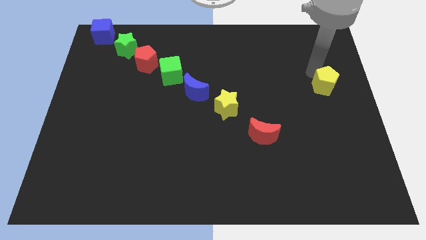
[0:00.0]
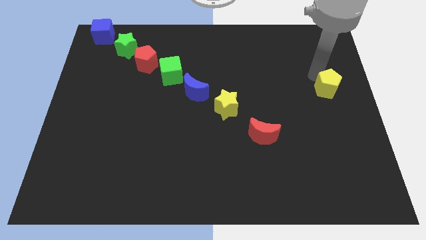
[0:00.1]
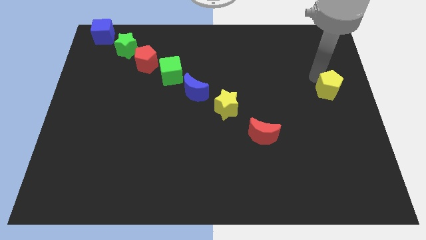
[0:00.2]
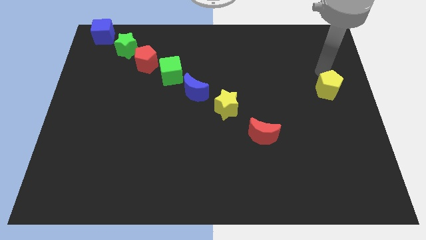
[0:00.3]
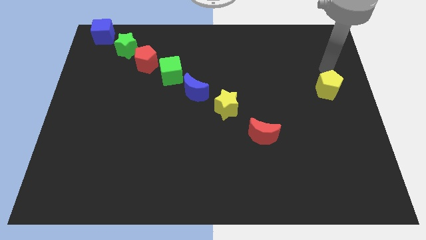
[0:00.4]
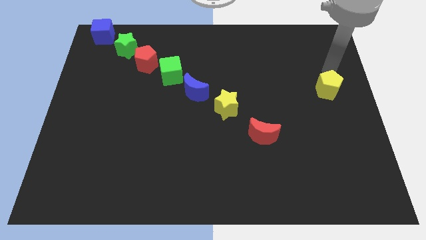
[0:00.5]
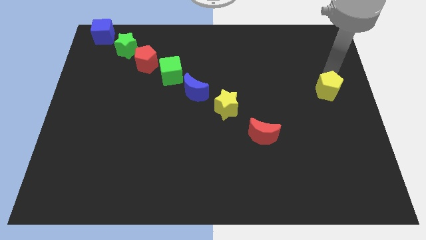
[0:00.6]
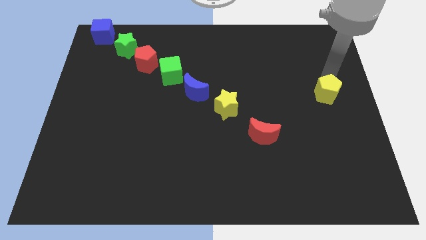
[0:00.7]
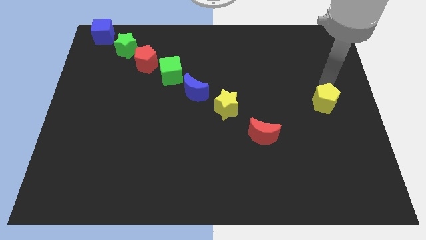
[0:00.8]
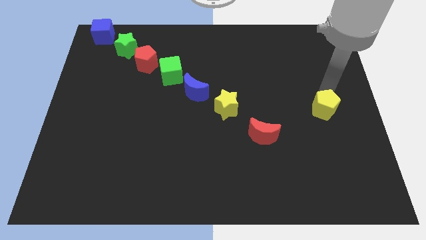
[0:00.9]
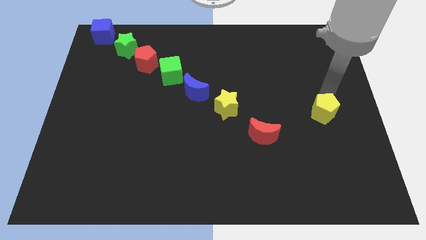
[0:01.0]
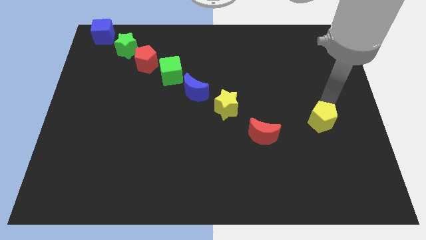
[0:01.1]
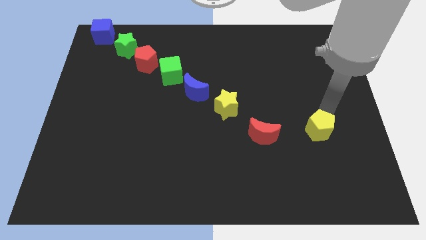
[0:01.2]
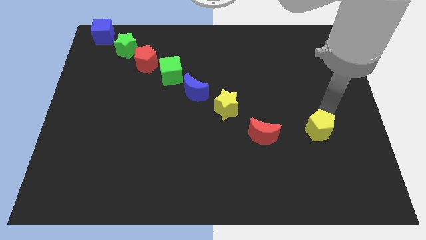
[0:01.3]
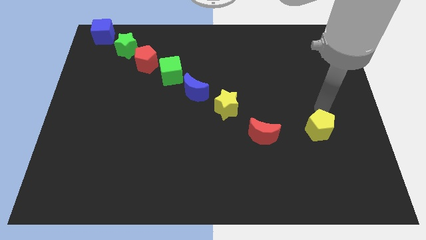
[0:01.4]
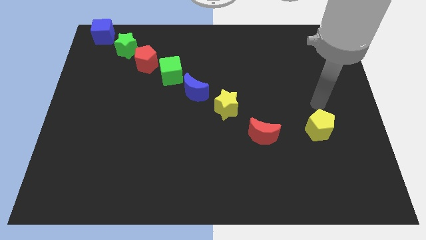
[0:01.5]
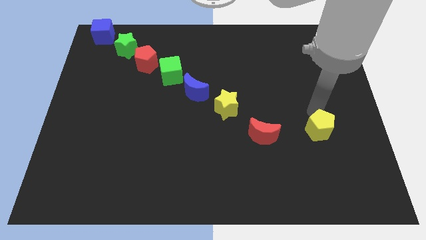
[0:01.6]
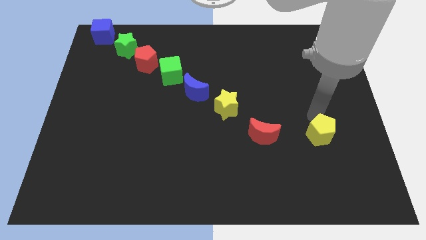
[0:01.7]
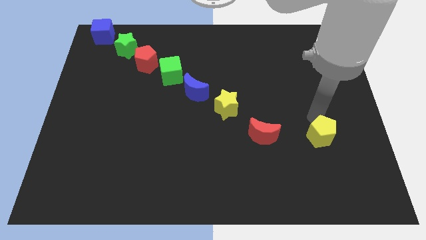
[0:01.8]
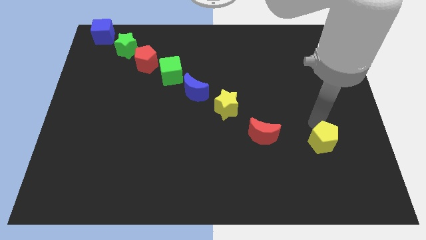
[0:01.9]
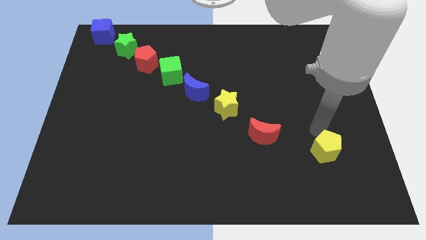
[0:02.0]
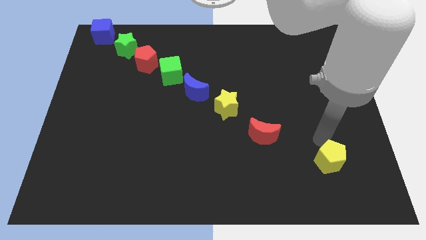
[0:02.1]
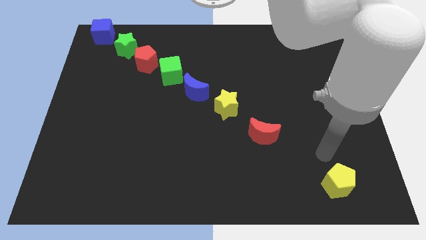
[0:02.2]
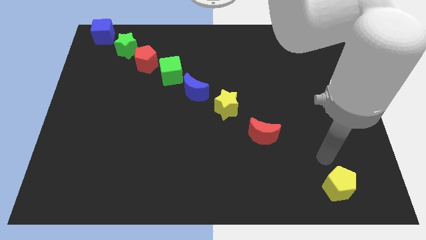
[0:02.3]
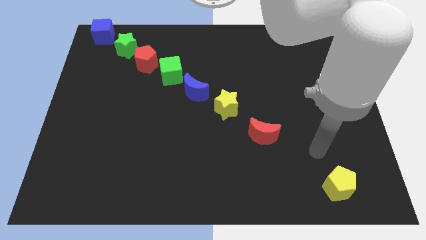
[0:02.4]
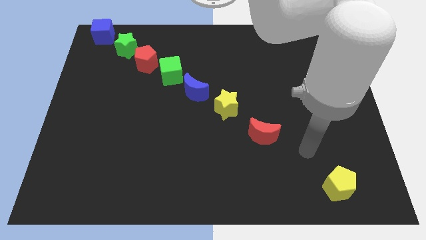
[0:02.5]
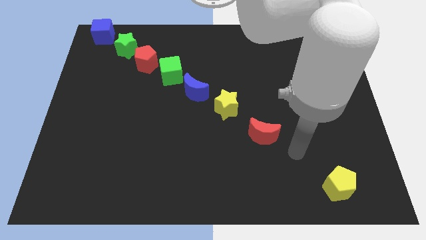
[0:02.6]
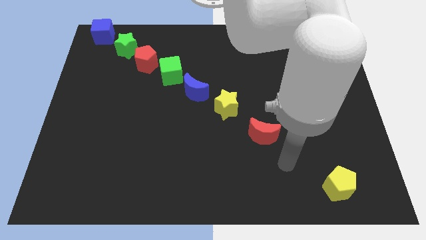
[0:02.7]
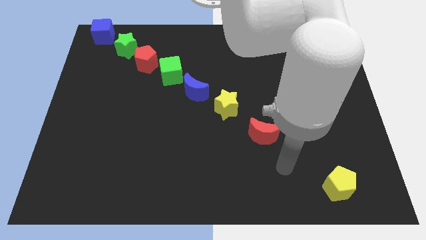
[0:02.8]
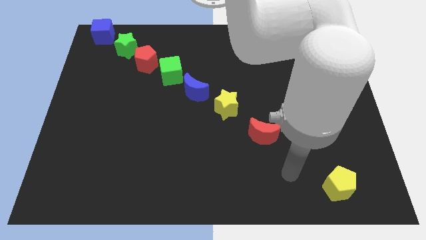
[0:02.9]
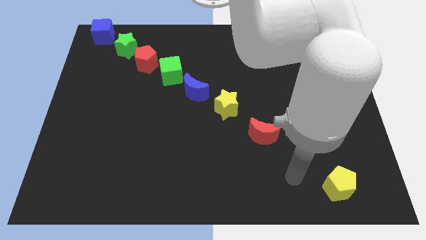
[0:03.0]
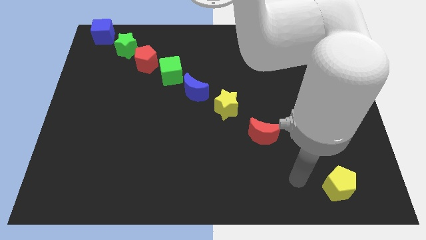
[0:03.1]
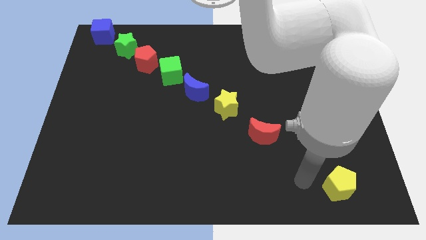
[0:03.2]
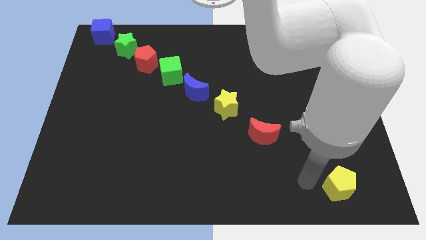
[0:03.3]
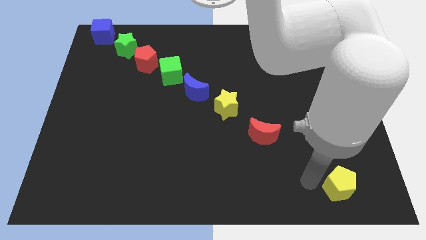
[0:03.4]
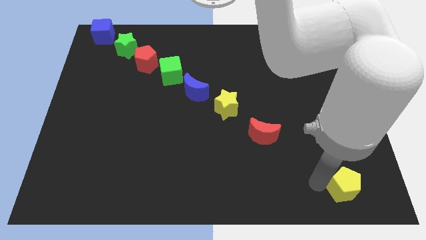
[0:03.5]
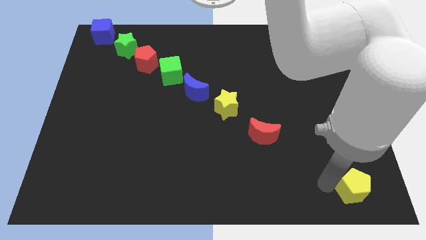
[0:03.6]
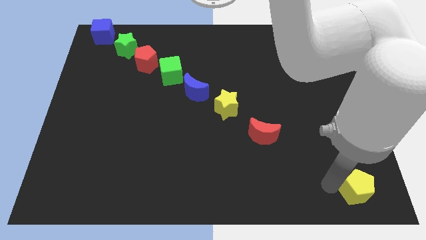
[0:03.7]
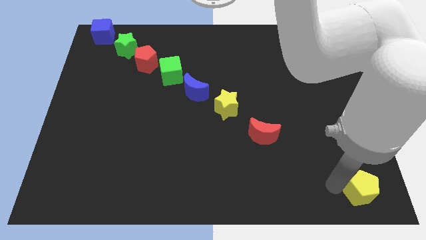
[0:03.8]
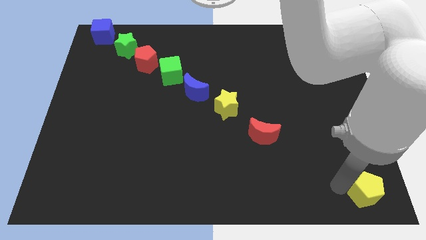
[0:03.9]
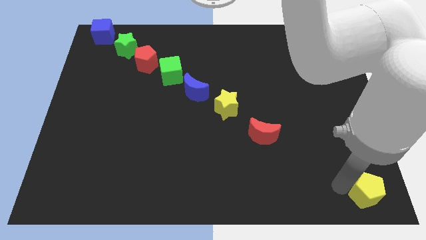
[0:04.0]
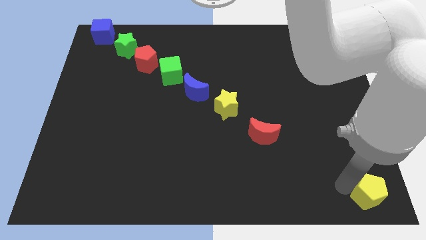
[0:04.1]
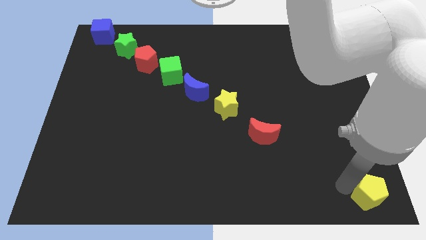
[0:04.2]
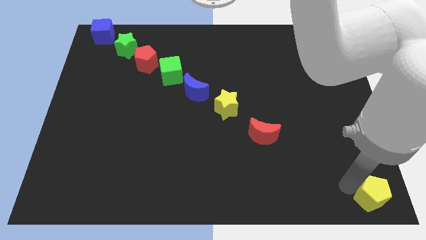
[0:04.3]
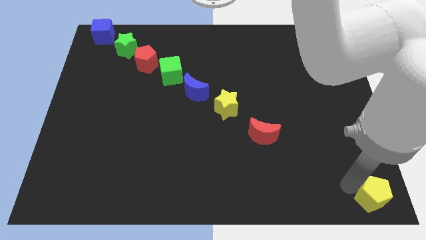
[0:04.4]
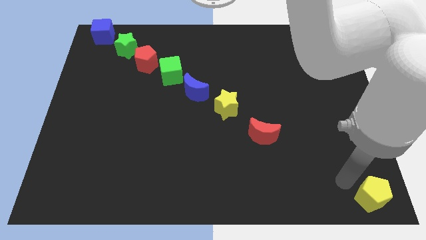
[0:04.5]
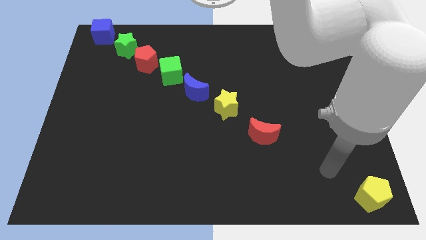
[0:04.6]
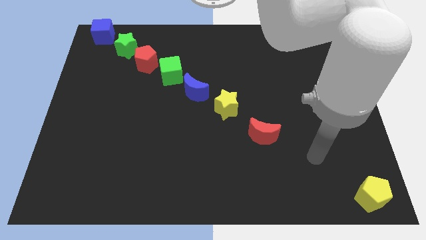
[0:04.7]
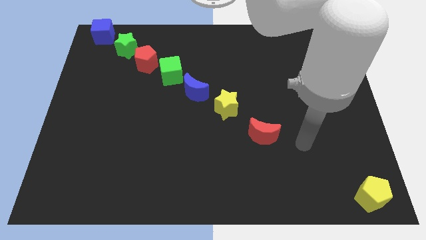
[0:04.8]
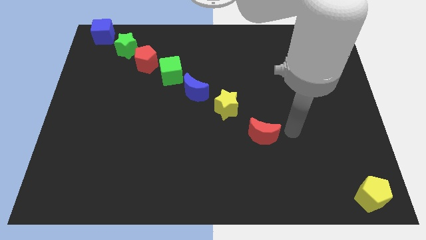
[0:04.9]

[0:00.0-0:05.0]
move the yellow pentagon to the bottom right corner

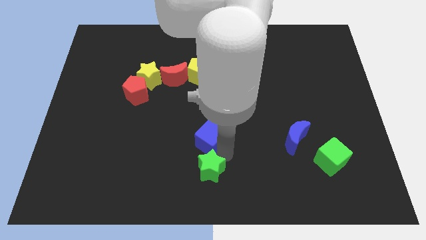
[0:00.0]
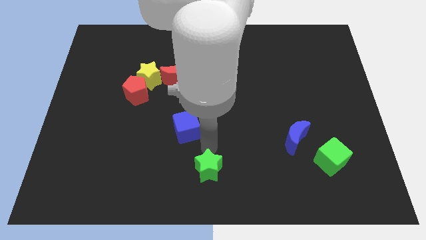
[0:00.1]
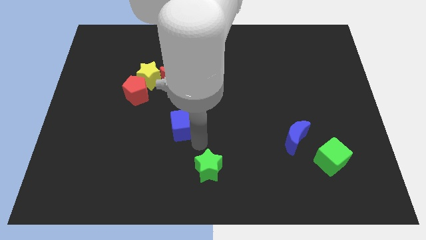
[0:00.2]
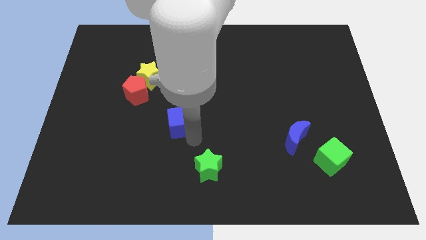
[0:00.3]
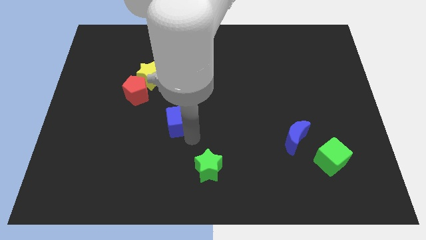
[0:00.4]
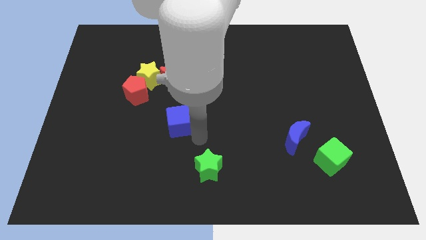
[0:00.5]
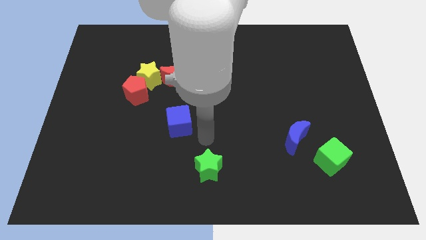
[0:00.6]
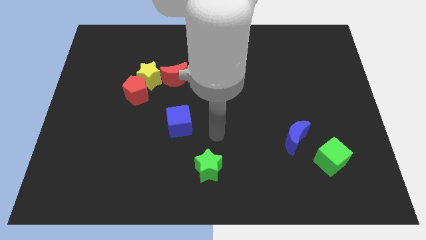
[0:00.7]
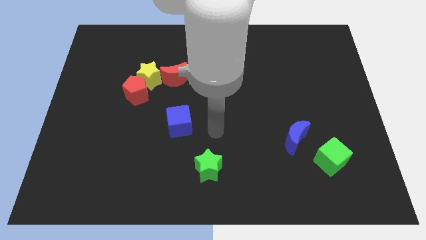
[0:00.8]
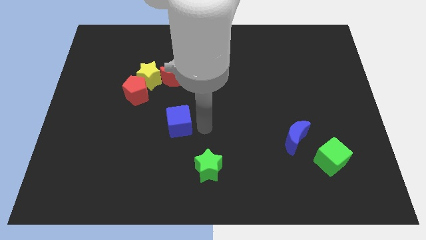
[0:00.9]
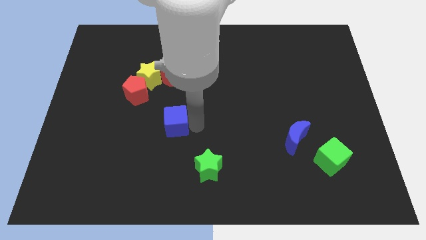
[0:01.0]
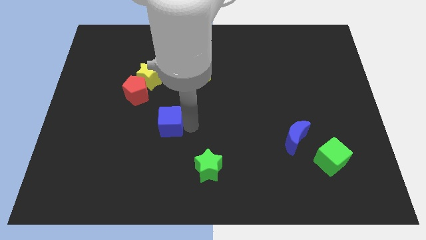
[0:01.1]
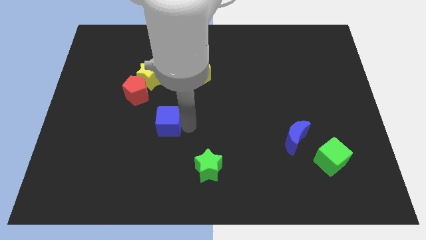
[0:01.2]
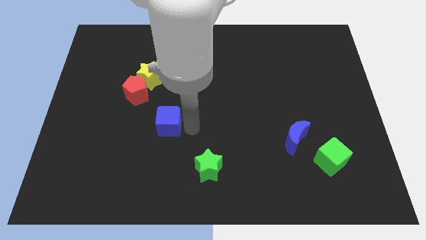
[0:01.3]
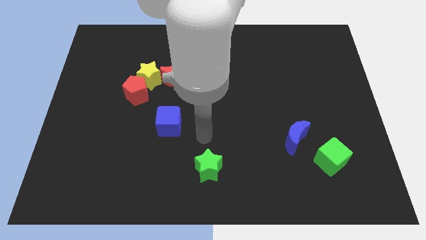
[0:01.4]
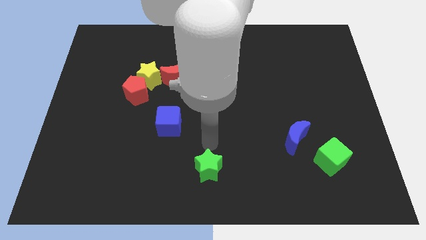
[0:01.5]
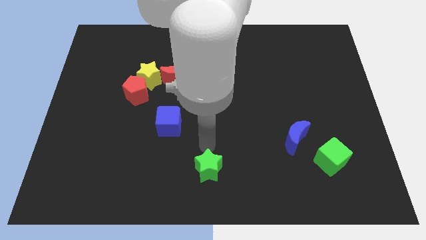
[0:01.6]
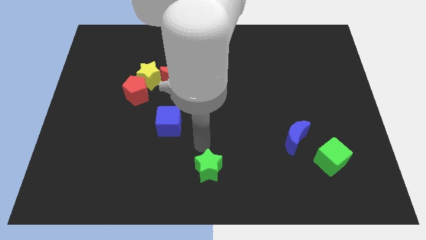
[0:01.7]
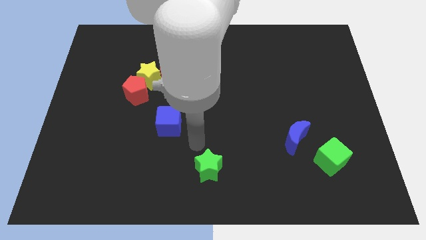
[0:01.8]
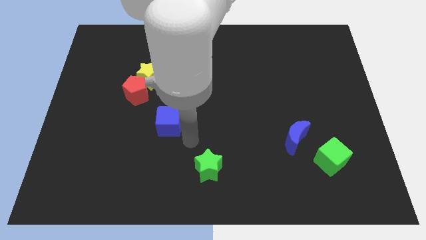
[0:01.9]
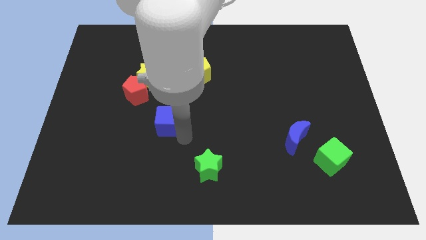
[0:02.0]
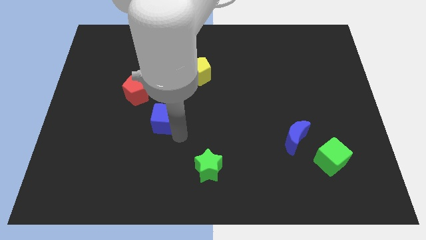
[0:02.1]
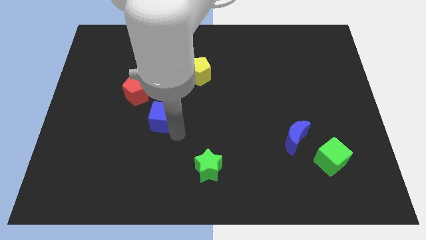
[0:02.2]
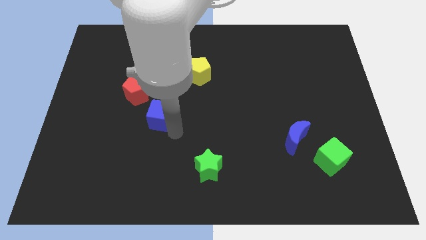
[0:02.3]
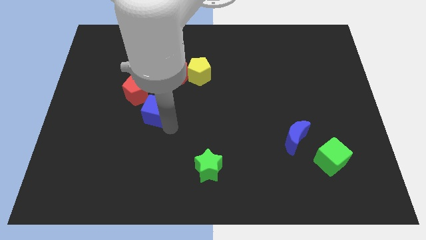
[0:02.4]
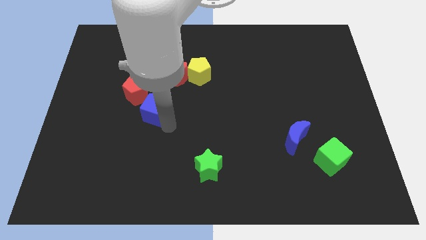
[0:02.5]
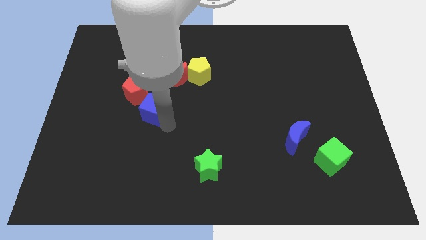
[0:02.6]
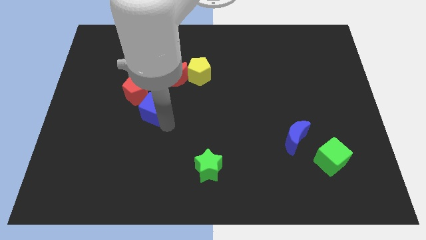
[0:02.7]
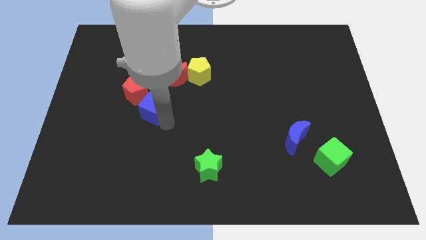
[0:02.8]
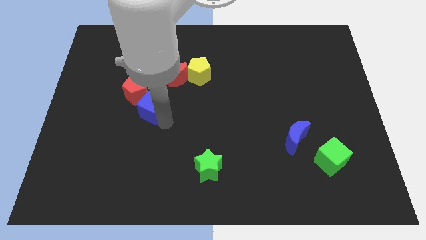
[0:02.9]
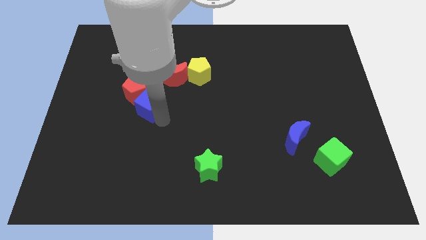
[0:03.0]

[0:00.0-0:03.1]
move the blue cube to the bottom of the yellow star

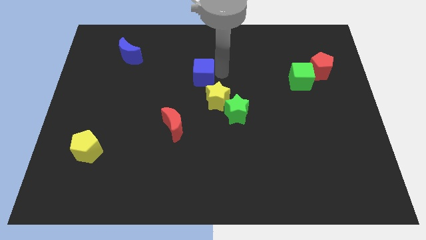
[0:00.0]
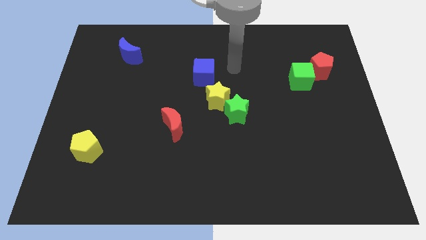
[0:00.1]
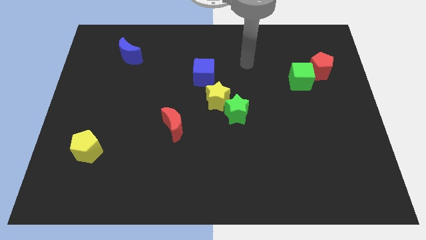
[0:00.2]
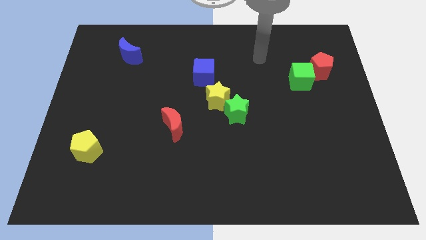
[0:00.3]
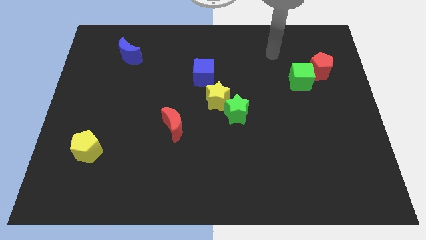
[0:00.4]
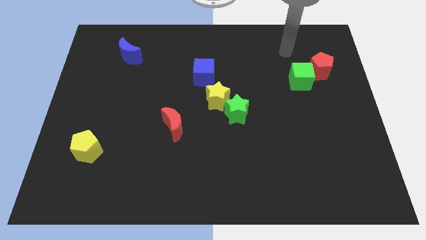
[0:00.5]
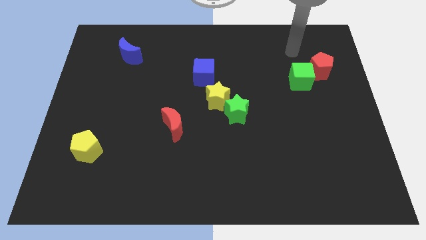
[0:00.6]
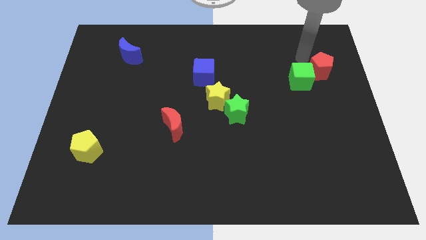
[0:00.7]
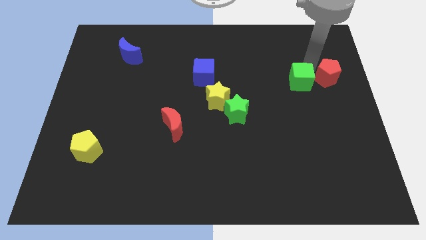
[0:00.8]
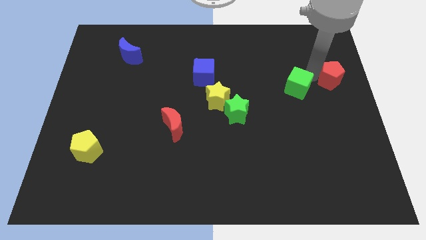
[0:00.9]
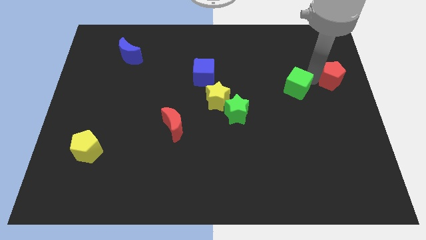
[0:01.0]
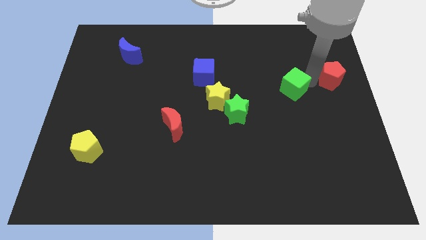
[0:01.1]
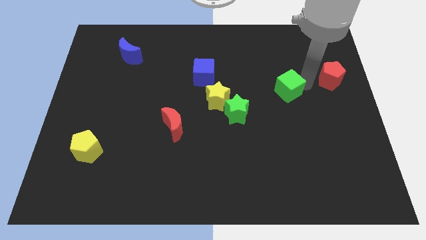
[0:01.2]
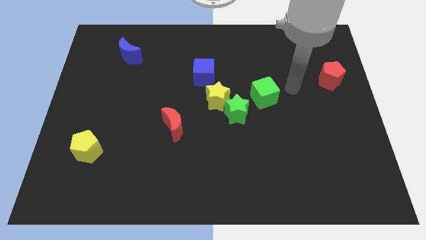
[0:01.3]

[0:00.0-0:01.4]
separate the green cube and red pentagon
